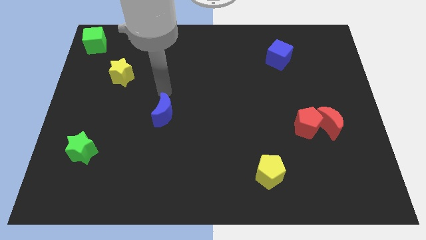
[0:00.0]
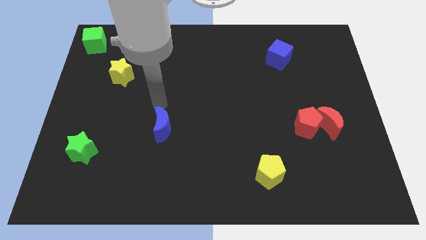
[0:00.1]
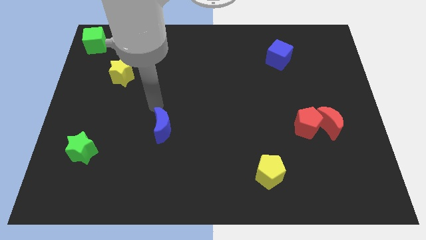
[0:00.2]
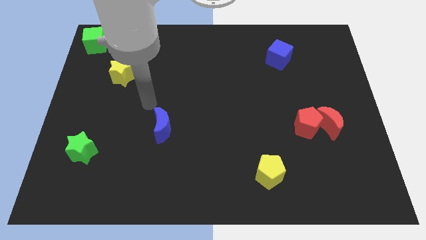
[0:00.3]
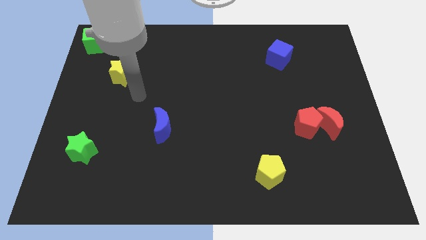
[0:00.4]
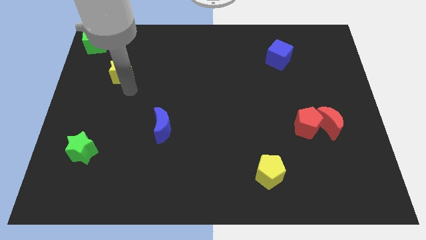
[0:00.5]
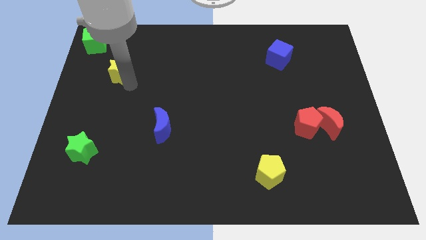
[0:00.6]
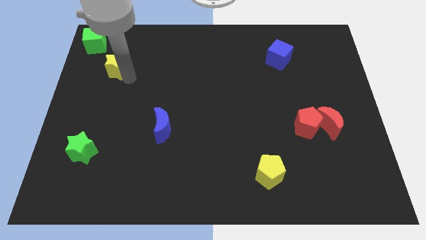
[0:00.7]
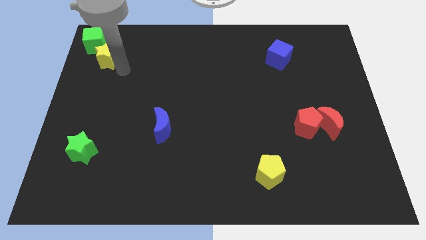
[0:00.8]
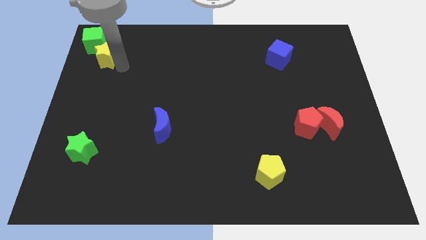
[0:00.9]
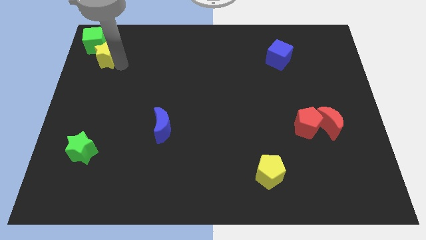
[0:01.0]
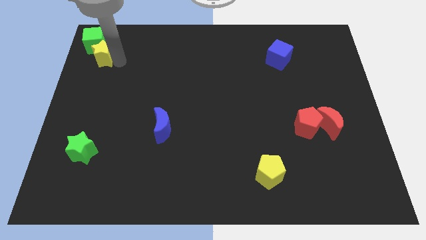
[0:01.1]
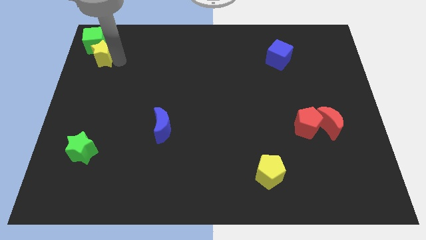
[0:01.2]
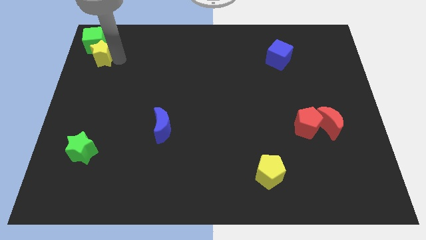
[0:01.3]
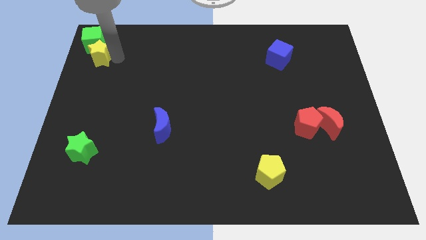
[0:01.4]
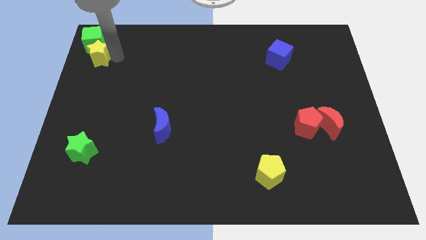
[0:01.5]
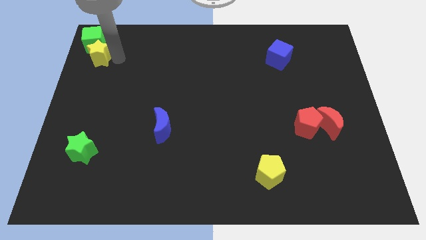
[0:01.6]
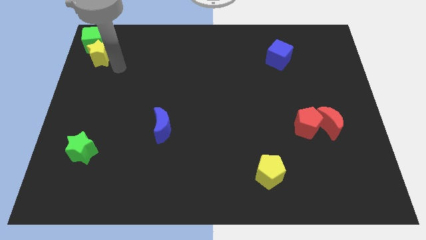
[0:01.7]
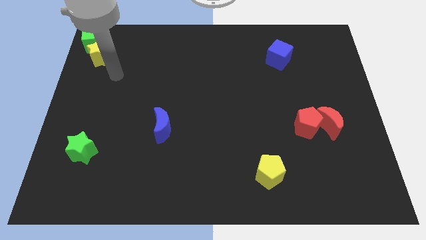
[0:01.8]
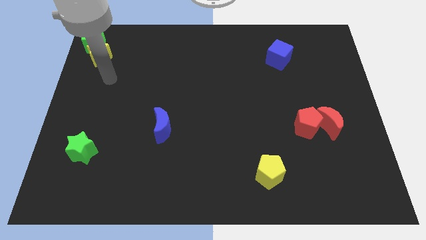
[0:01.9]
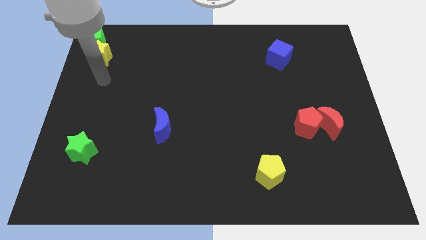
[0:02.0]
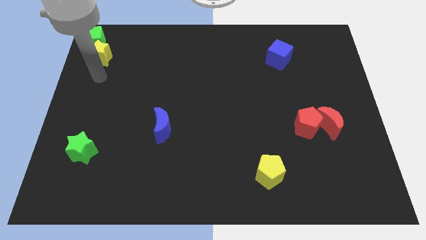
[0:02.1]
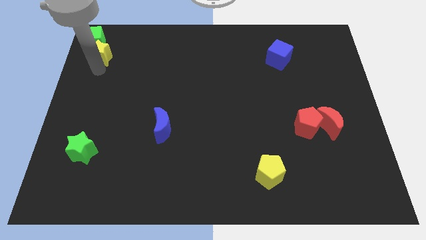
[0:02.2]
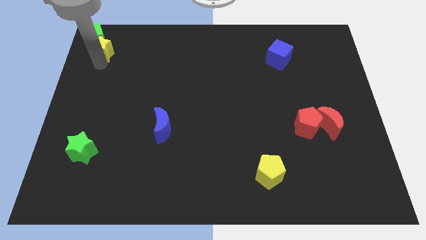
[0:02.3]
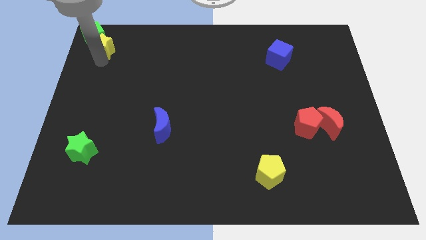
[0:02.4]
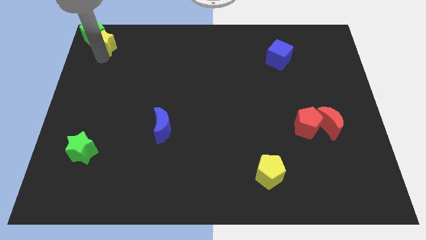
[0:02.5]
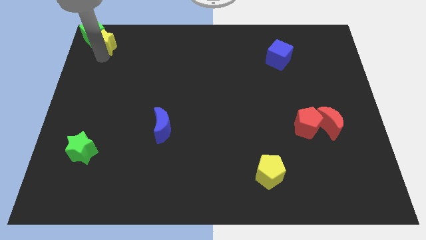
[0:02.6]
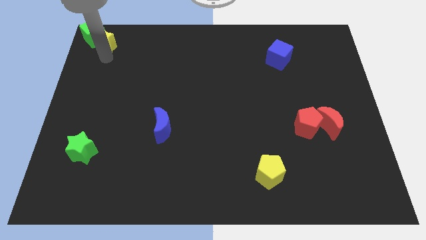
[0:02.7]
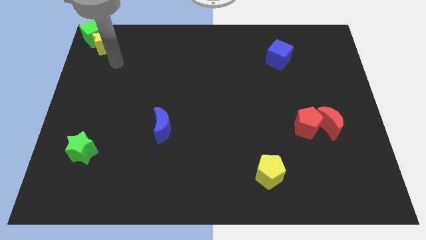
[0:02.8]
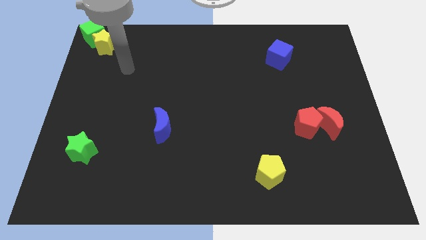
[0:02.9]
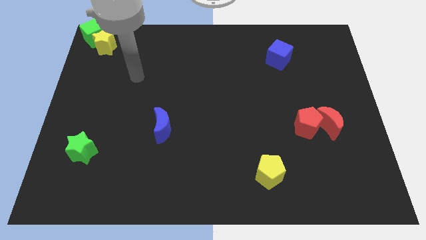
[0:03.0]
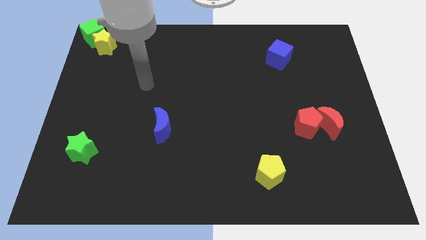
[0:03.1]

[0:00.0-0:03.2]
push the yellow star into the green cube

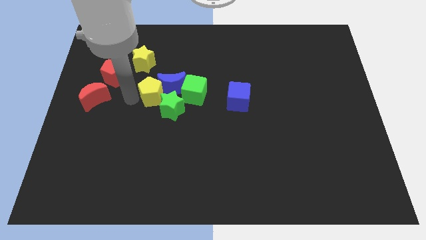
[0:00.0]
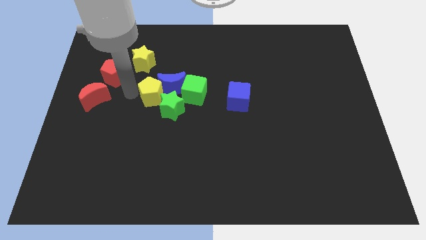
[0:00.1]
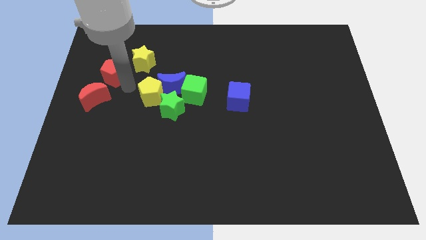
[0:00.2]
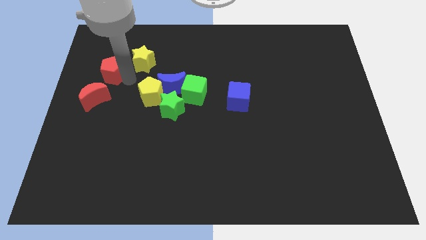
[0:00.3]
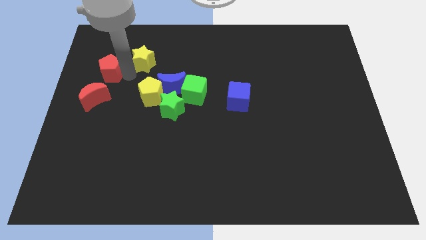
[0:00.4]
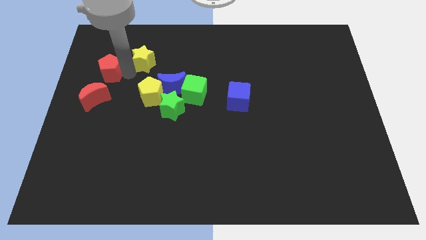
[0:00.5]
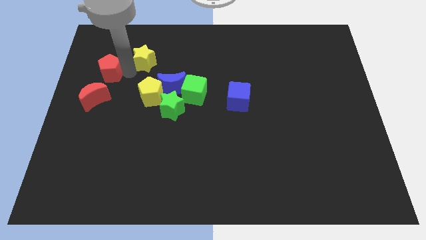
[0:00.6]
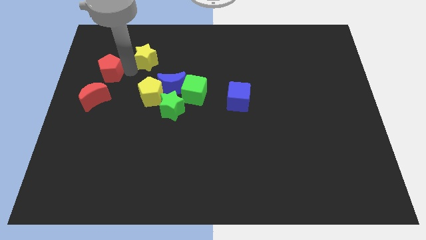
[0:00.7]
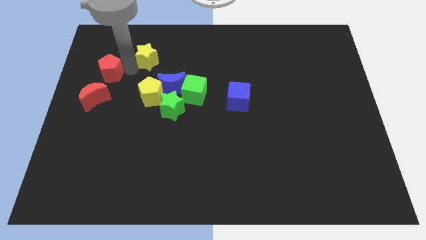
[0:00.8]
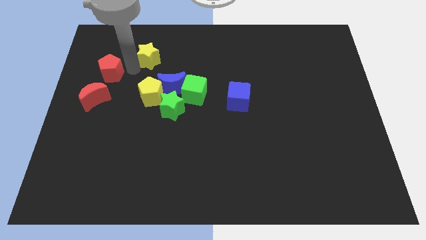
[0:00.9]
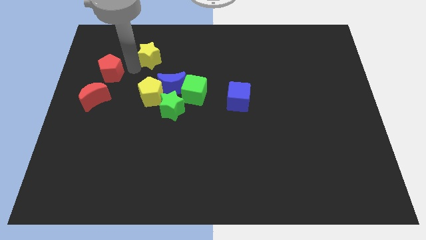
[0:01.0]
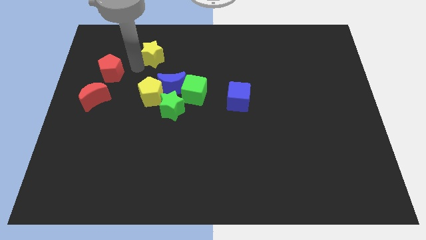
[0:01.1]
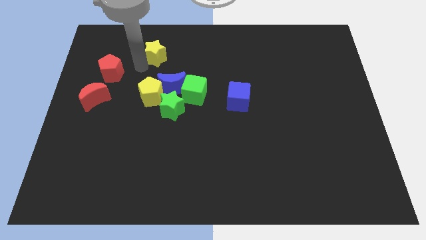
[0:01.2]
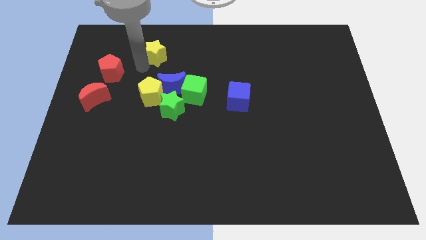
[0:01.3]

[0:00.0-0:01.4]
place the yellow star vertically above to the yellow pentagon

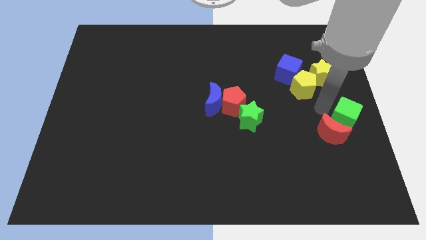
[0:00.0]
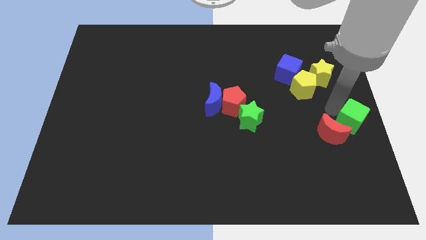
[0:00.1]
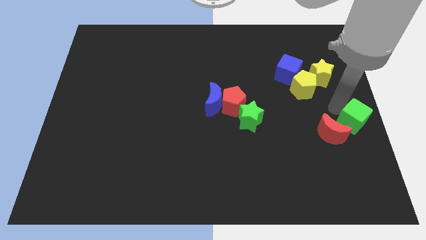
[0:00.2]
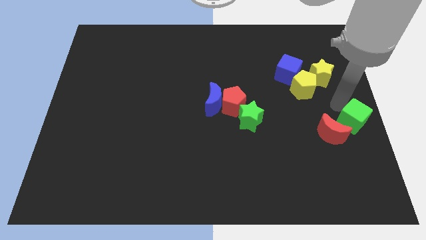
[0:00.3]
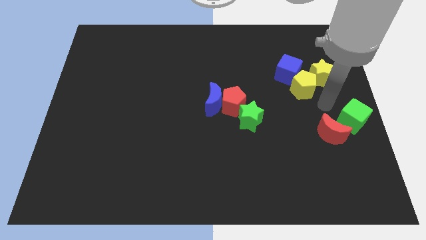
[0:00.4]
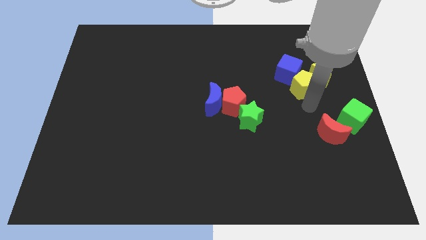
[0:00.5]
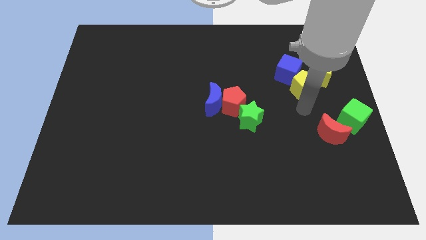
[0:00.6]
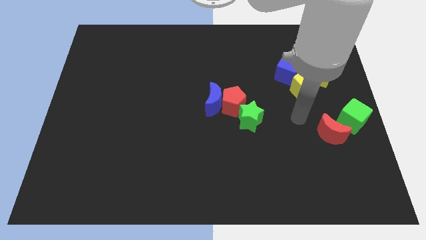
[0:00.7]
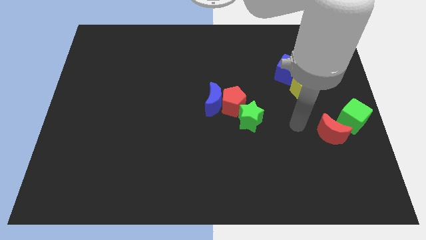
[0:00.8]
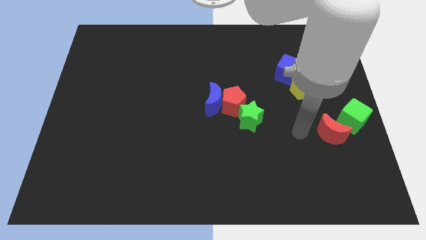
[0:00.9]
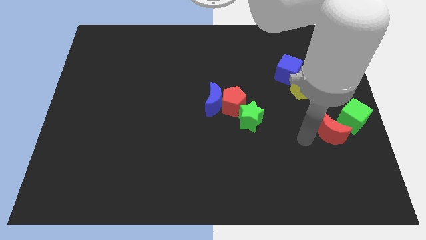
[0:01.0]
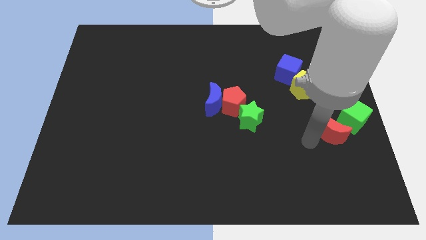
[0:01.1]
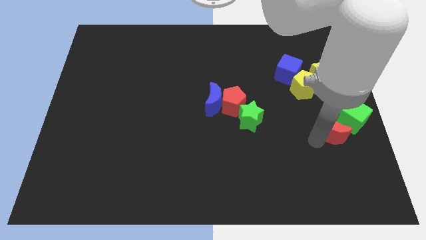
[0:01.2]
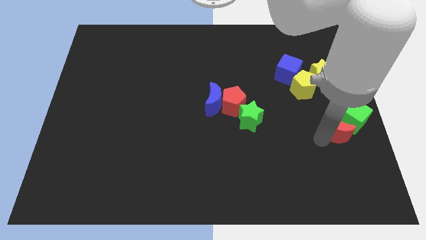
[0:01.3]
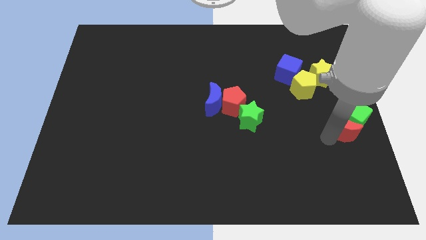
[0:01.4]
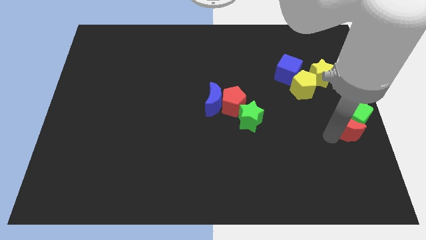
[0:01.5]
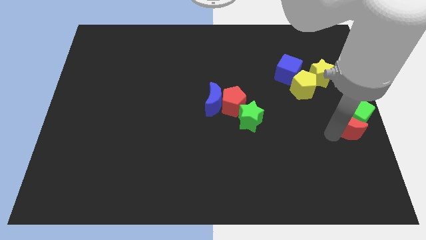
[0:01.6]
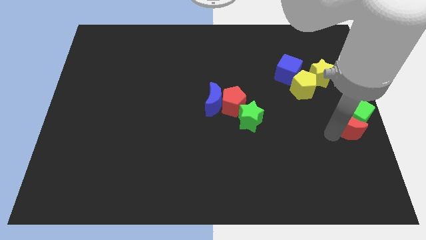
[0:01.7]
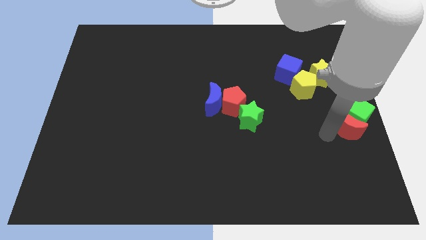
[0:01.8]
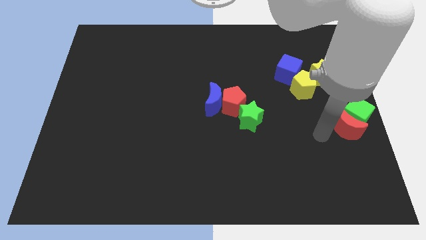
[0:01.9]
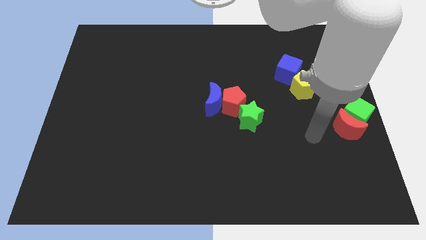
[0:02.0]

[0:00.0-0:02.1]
push the green cube to the right center of the board with the red crescent

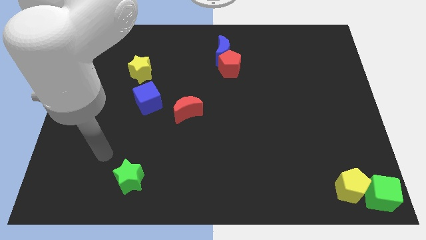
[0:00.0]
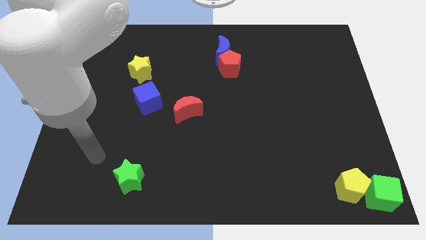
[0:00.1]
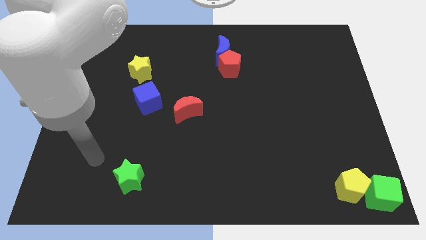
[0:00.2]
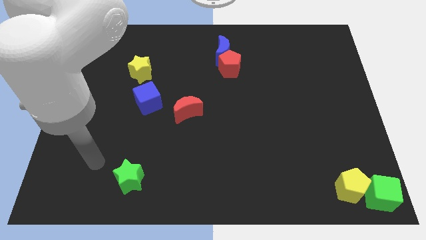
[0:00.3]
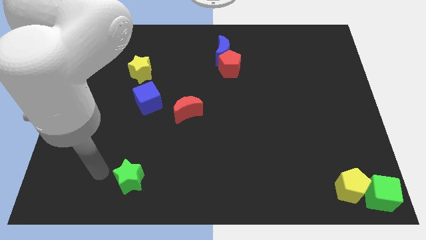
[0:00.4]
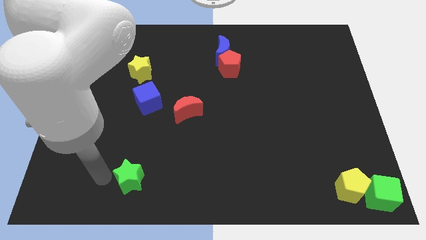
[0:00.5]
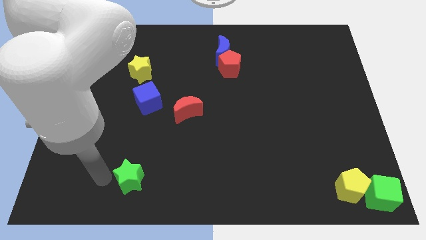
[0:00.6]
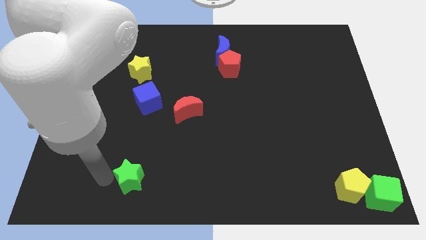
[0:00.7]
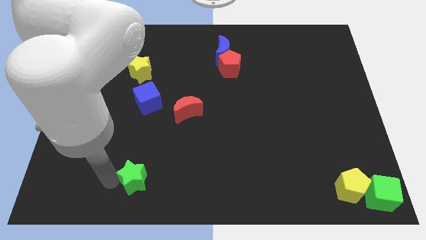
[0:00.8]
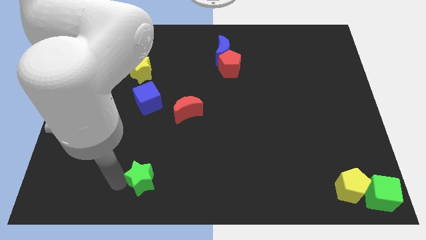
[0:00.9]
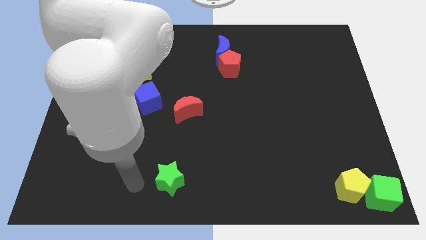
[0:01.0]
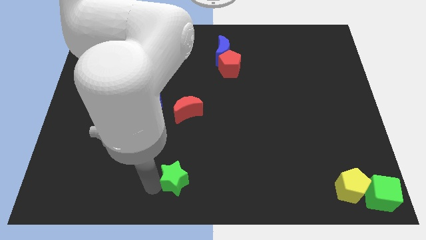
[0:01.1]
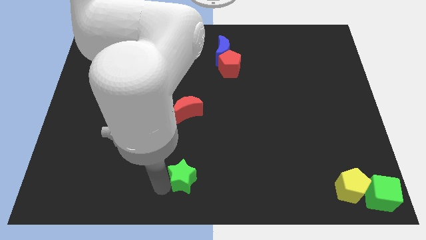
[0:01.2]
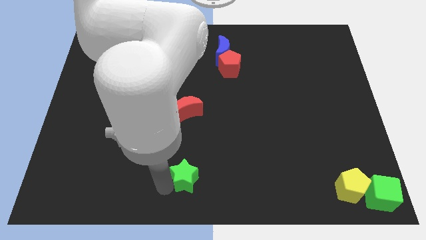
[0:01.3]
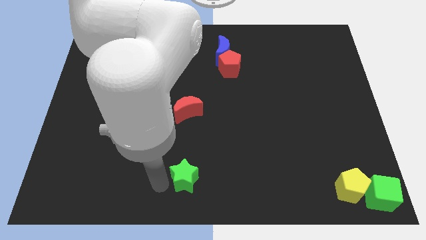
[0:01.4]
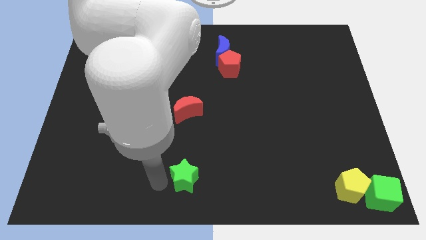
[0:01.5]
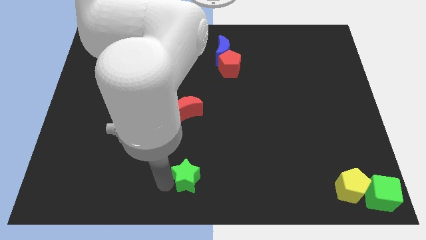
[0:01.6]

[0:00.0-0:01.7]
place the green star below the red moon

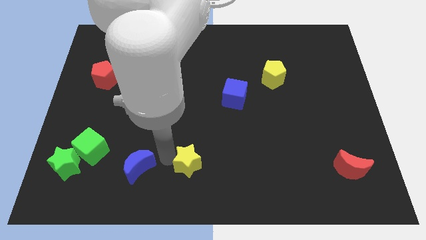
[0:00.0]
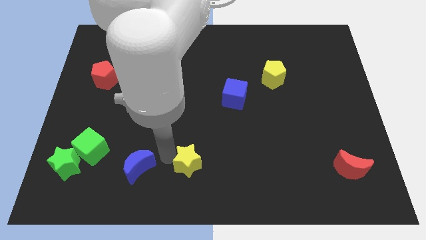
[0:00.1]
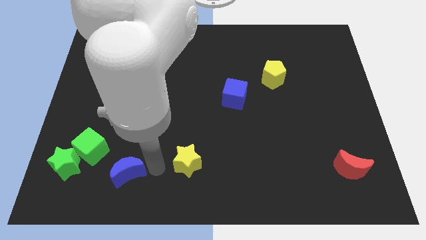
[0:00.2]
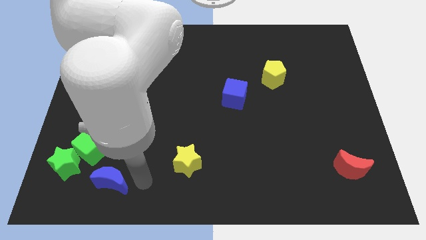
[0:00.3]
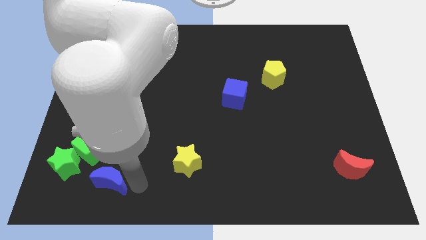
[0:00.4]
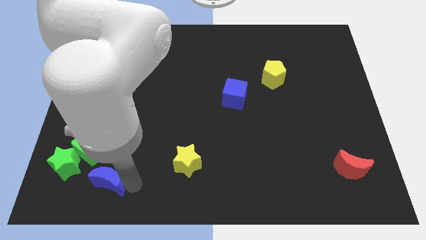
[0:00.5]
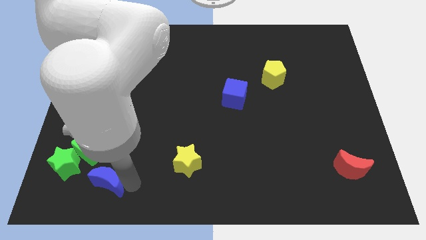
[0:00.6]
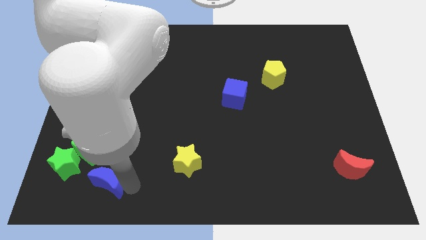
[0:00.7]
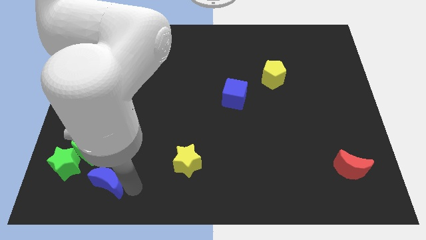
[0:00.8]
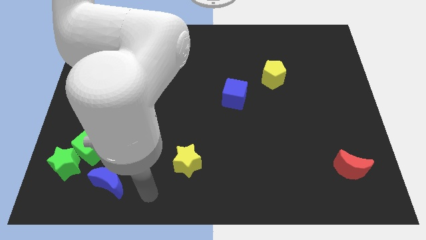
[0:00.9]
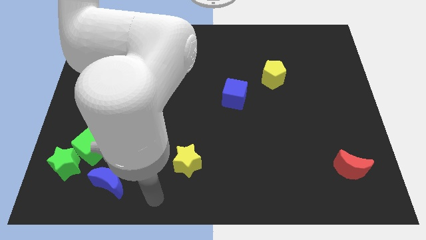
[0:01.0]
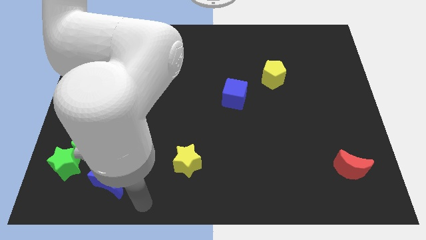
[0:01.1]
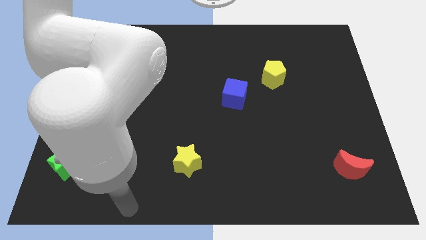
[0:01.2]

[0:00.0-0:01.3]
place the blue crescent below the green cube
